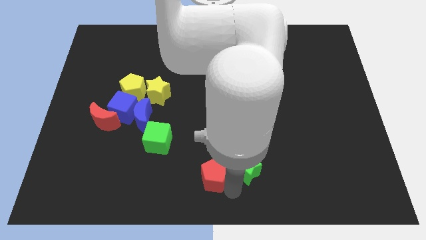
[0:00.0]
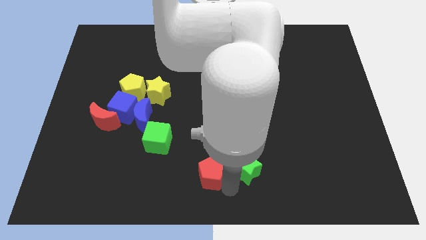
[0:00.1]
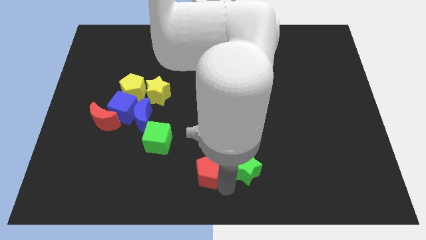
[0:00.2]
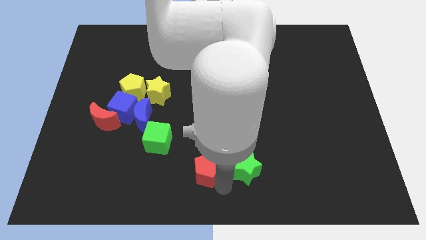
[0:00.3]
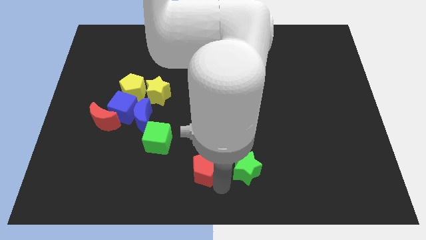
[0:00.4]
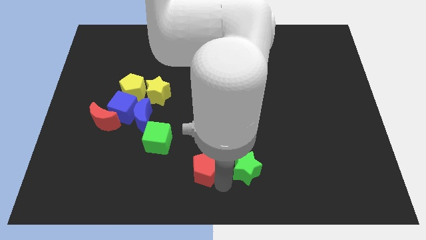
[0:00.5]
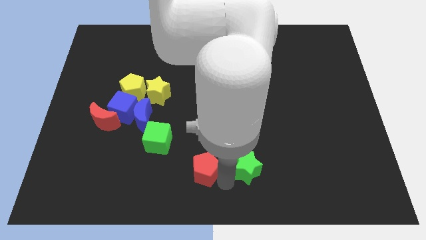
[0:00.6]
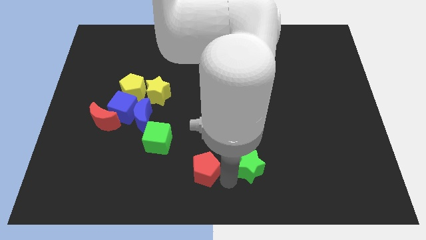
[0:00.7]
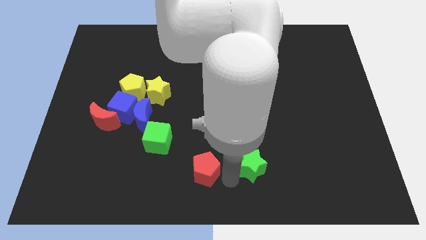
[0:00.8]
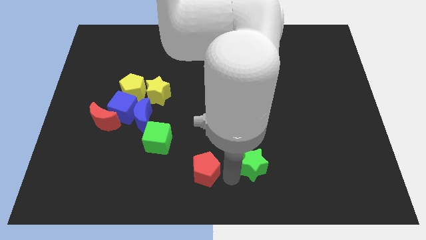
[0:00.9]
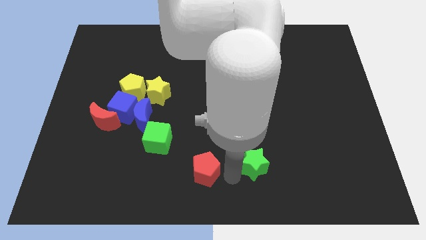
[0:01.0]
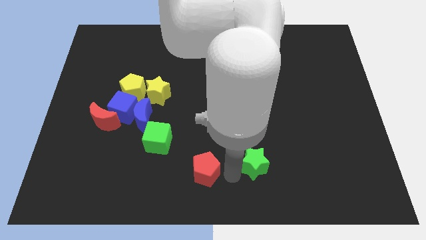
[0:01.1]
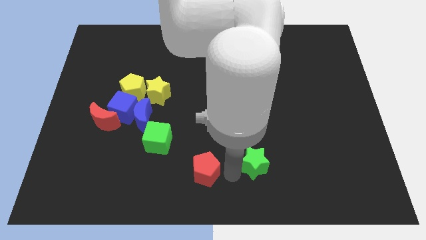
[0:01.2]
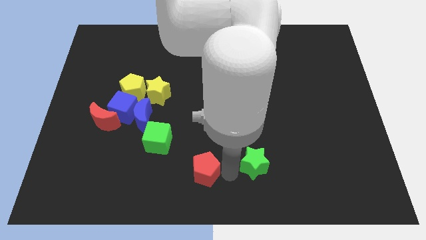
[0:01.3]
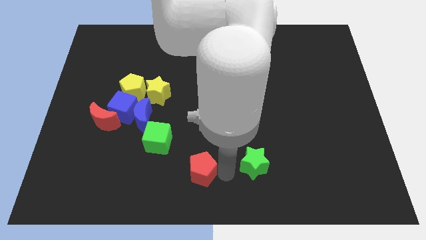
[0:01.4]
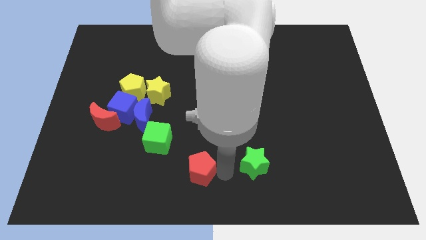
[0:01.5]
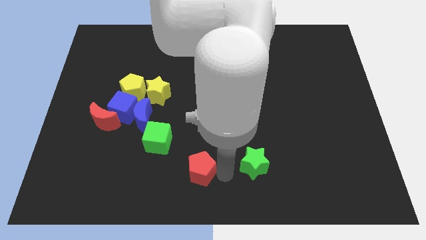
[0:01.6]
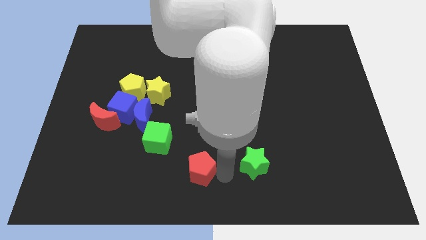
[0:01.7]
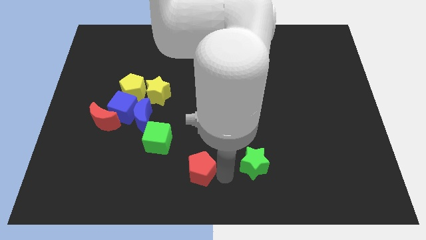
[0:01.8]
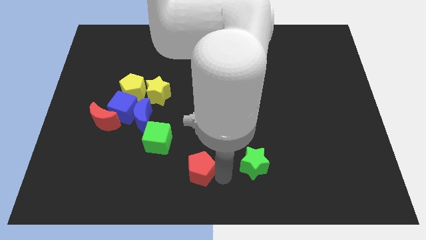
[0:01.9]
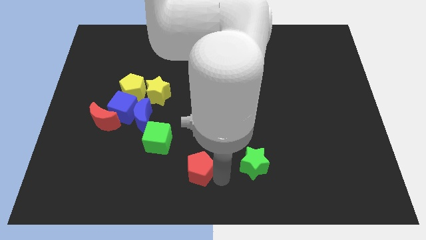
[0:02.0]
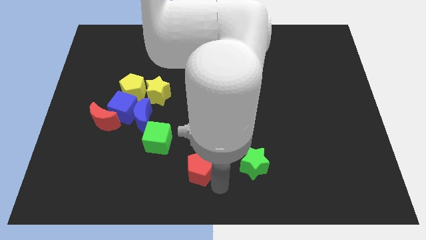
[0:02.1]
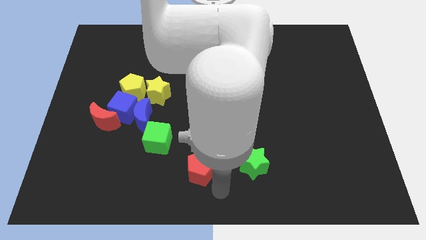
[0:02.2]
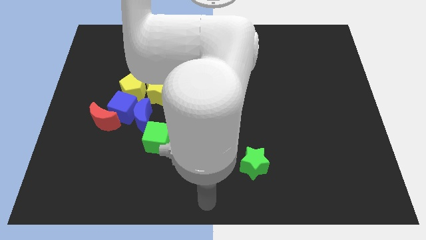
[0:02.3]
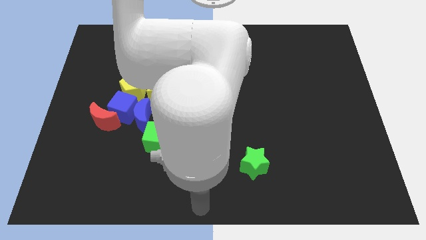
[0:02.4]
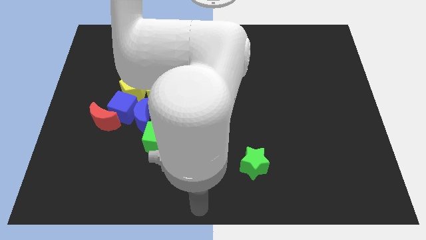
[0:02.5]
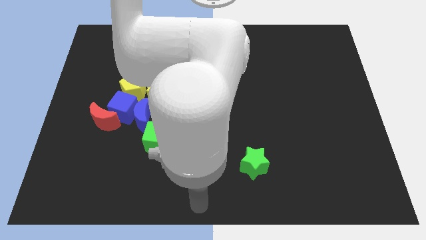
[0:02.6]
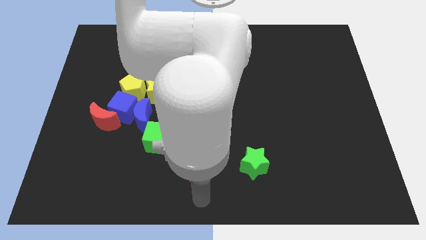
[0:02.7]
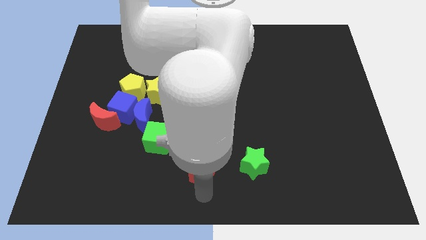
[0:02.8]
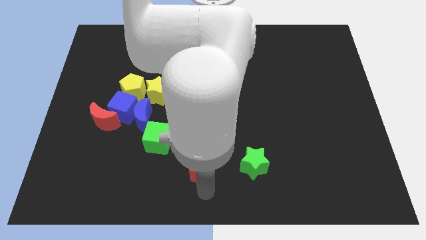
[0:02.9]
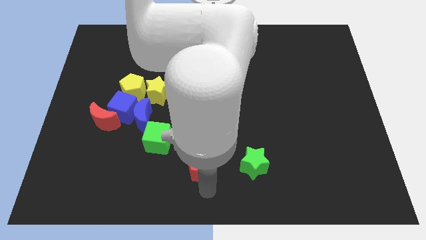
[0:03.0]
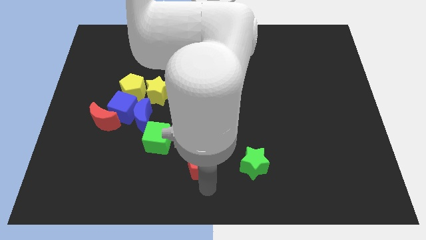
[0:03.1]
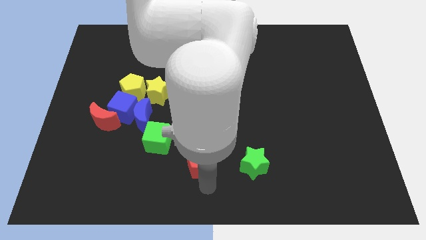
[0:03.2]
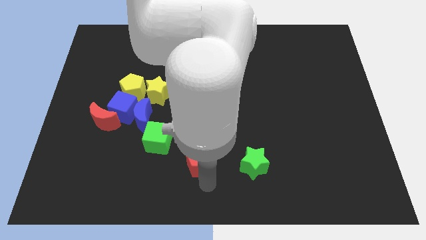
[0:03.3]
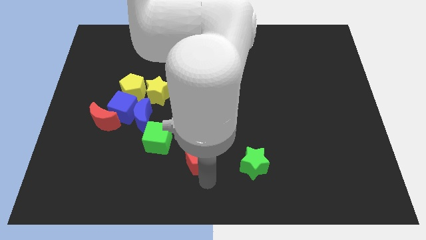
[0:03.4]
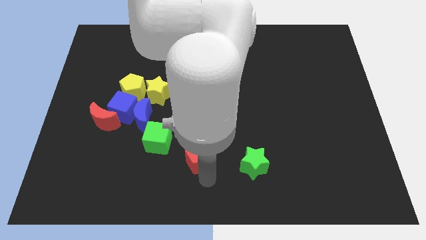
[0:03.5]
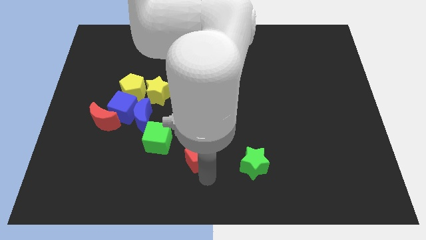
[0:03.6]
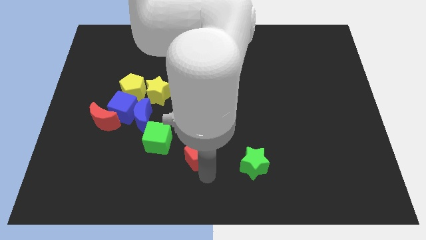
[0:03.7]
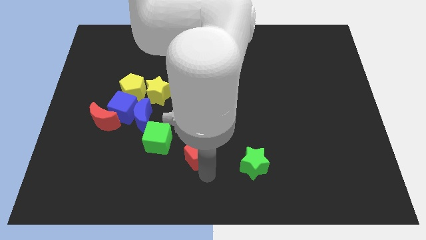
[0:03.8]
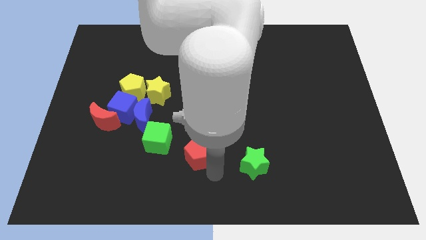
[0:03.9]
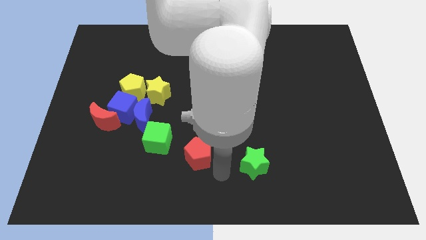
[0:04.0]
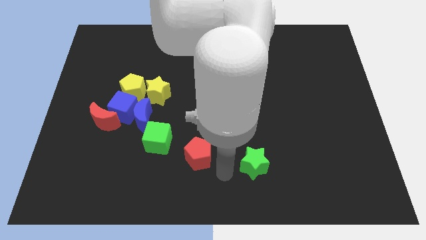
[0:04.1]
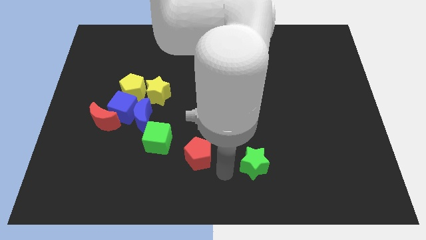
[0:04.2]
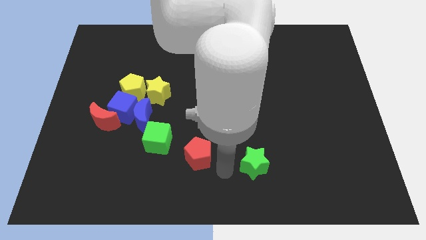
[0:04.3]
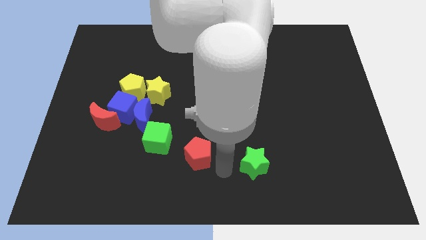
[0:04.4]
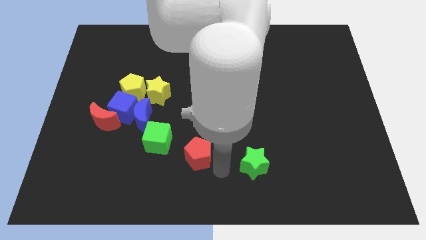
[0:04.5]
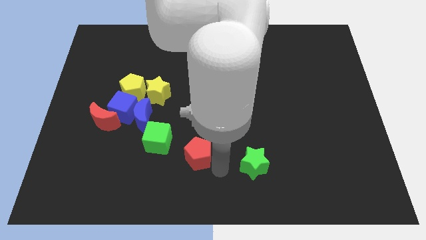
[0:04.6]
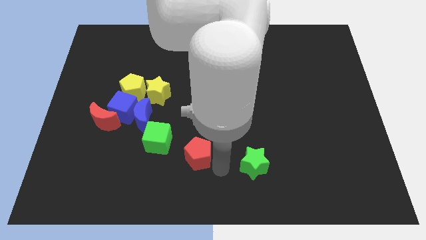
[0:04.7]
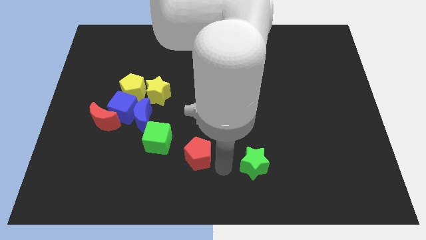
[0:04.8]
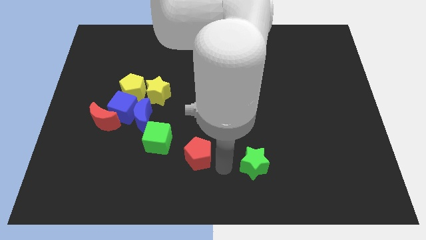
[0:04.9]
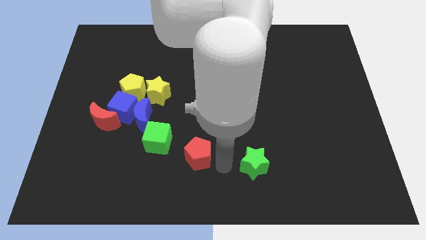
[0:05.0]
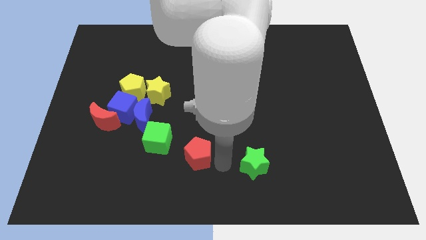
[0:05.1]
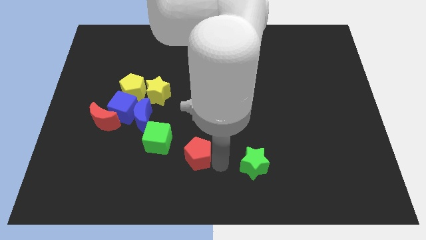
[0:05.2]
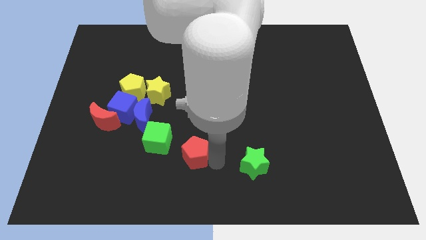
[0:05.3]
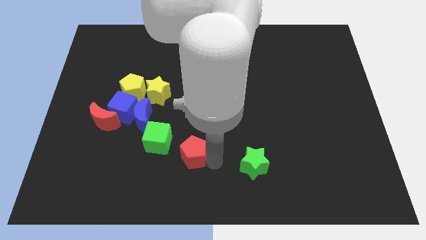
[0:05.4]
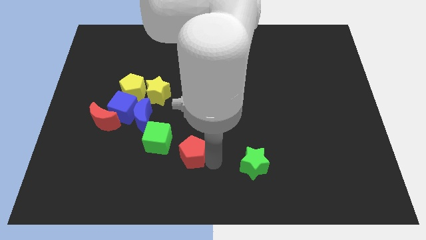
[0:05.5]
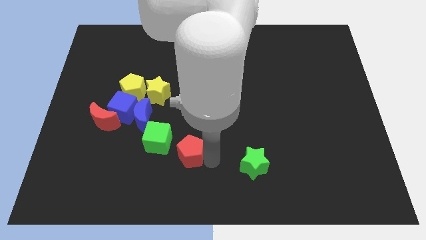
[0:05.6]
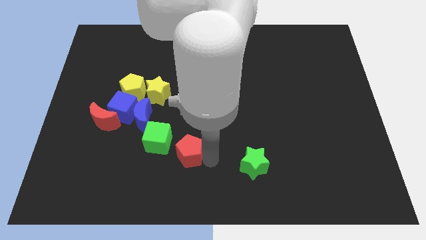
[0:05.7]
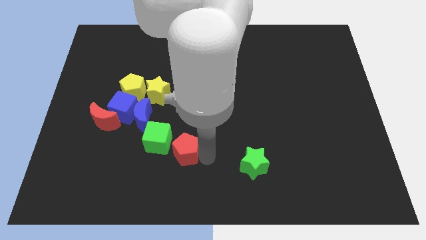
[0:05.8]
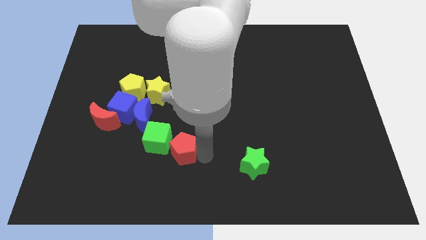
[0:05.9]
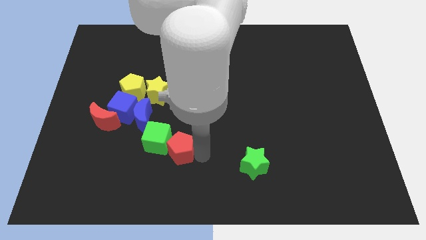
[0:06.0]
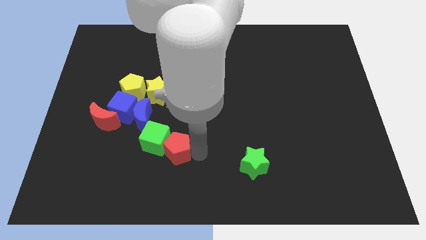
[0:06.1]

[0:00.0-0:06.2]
place the red pentagon opposite tp green cube

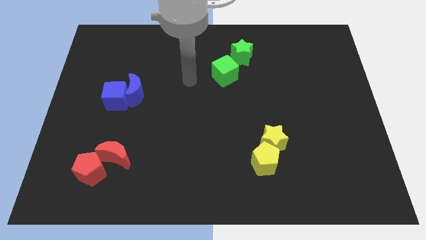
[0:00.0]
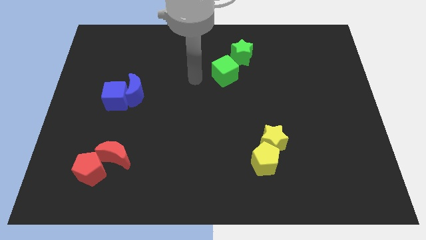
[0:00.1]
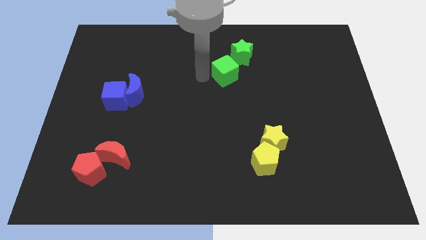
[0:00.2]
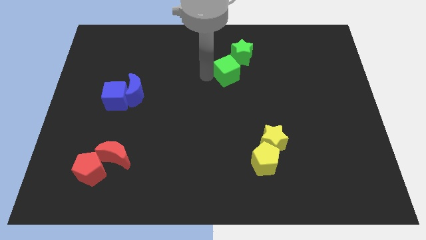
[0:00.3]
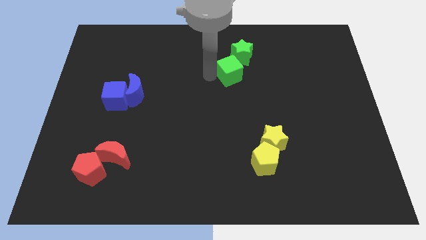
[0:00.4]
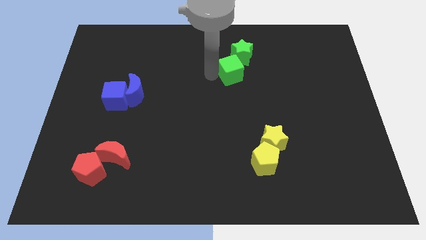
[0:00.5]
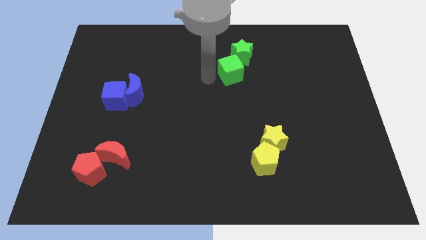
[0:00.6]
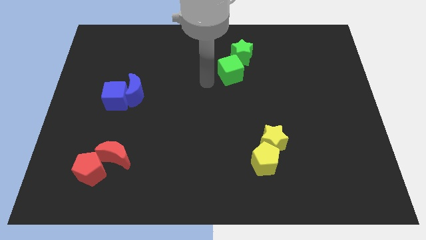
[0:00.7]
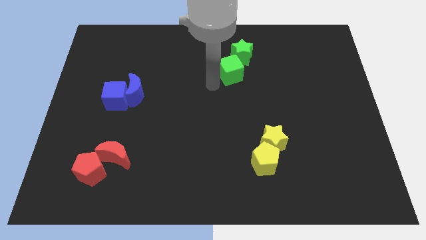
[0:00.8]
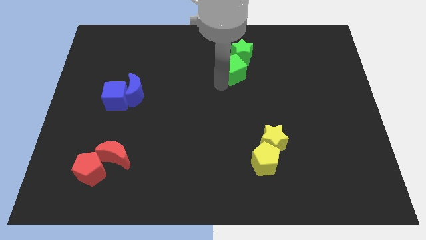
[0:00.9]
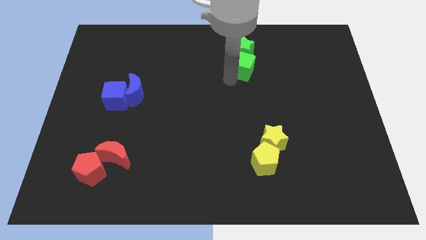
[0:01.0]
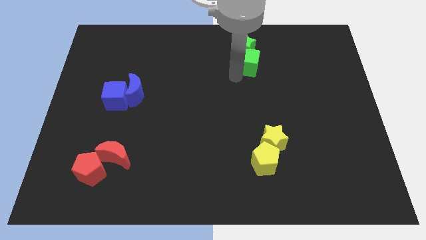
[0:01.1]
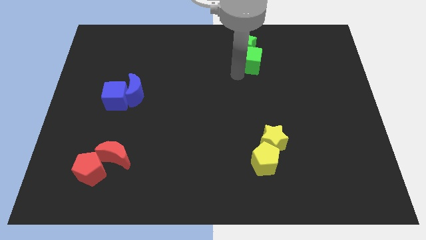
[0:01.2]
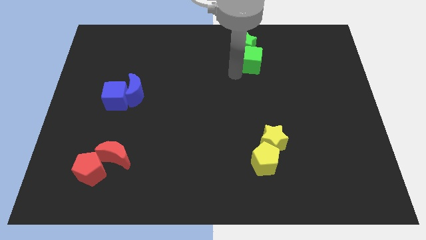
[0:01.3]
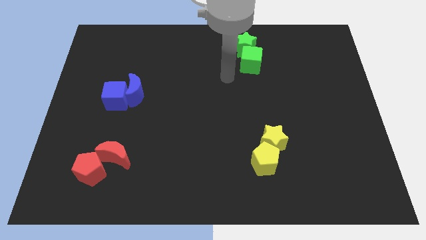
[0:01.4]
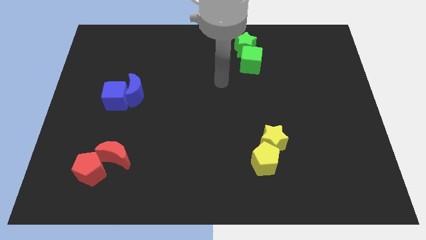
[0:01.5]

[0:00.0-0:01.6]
push the green blocks slightly upwards

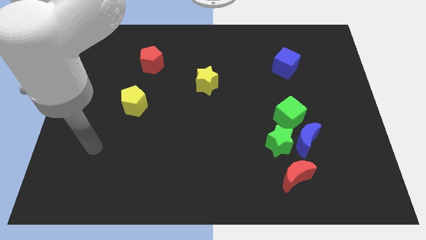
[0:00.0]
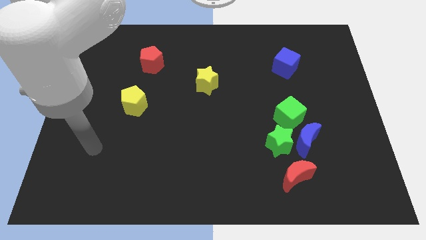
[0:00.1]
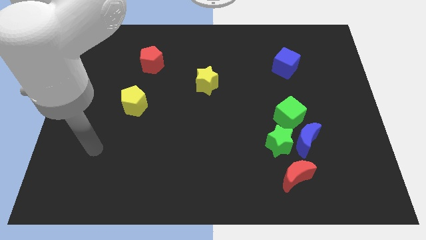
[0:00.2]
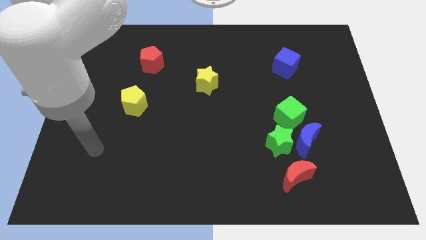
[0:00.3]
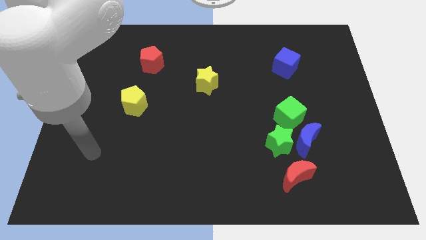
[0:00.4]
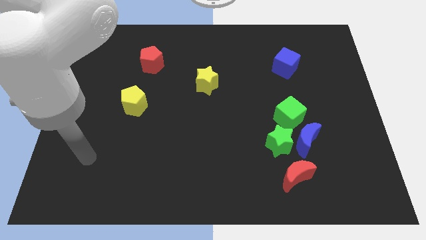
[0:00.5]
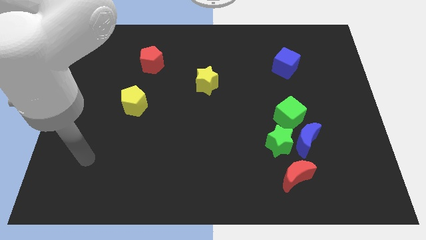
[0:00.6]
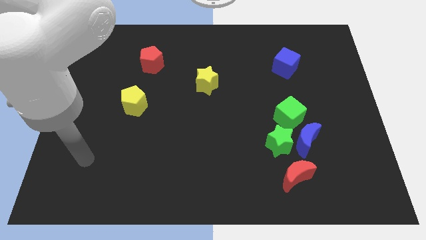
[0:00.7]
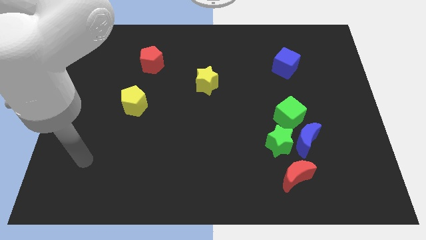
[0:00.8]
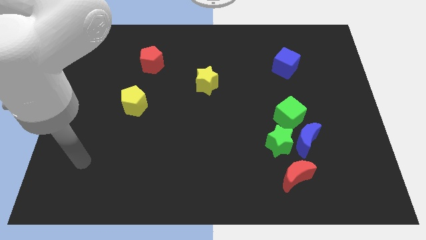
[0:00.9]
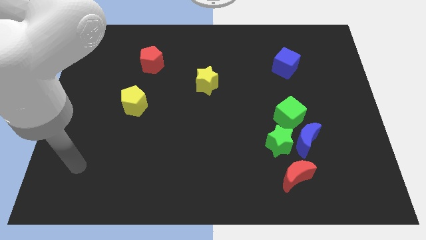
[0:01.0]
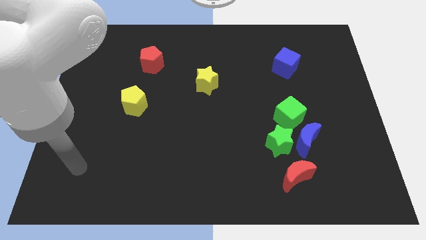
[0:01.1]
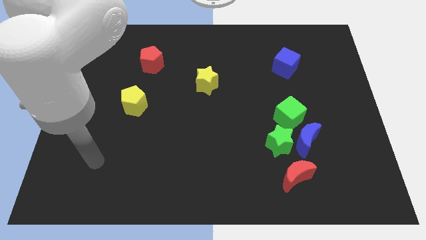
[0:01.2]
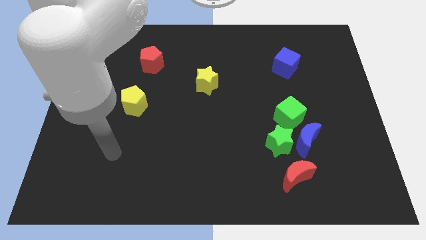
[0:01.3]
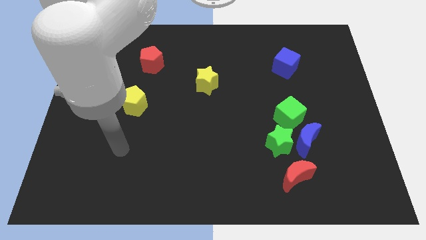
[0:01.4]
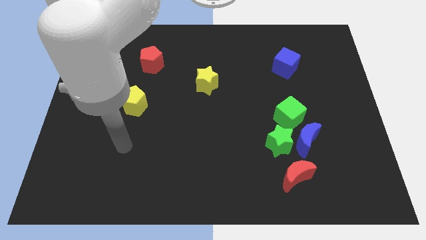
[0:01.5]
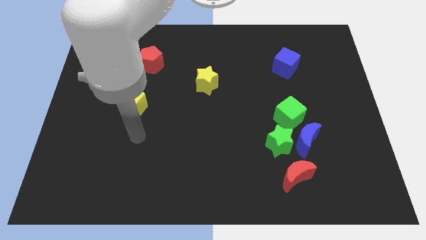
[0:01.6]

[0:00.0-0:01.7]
put your hand vertically below the yellow star
